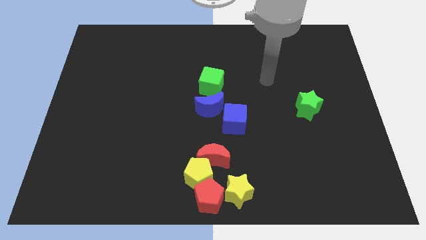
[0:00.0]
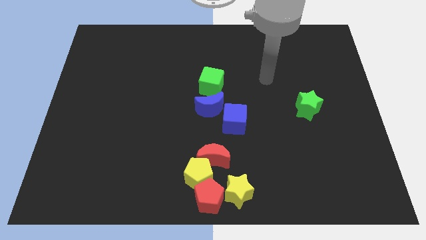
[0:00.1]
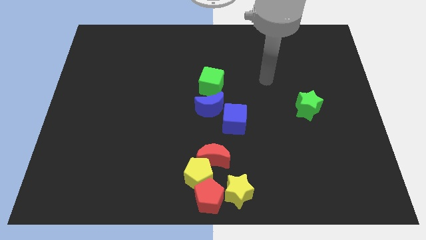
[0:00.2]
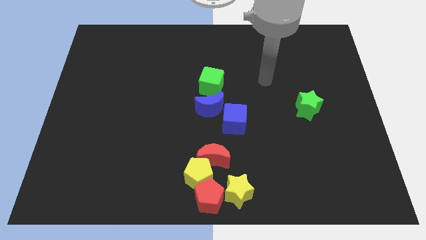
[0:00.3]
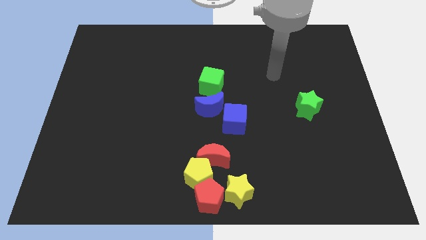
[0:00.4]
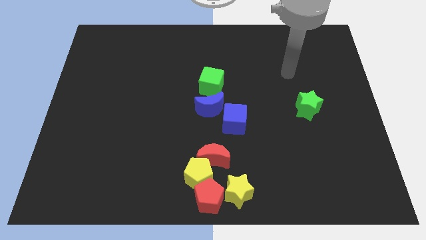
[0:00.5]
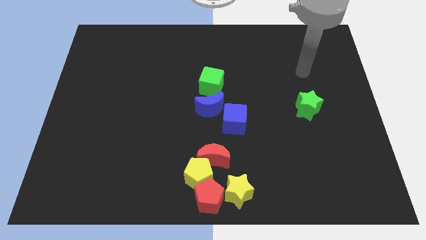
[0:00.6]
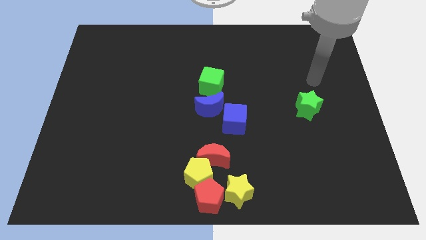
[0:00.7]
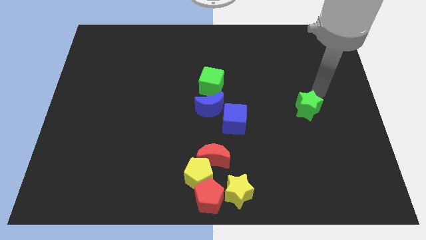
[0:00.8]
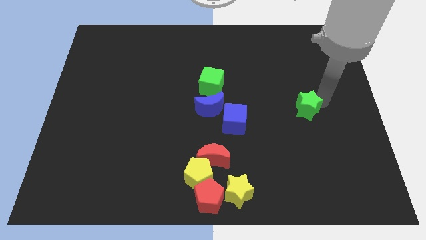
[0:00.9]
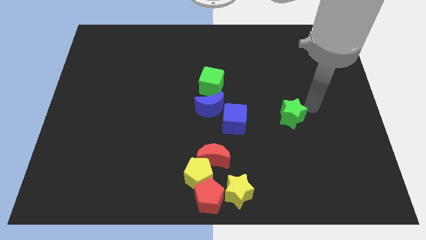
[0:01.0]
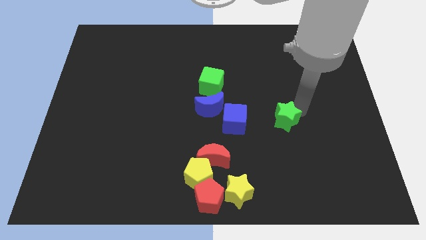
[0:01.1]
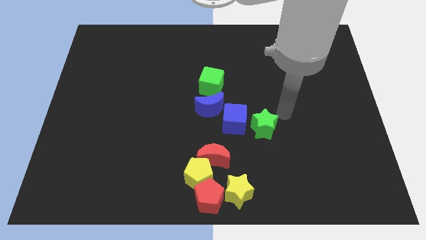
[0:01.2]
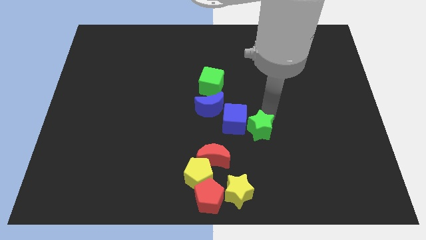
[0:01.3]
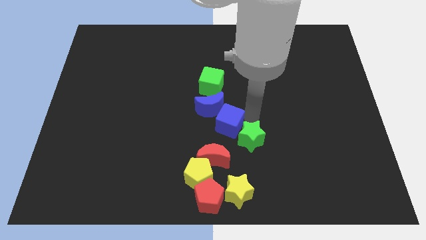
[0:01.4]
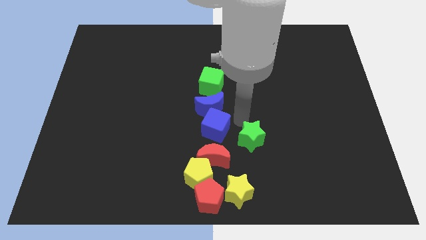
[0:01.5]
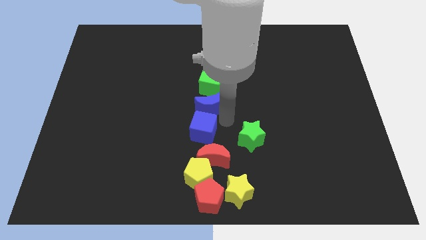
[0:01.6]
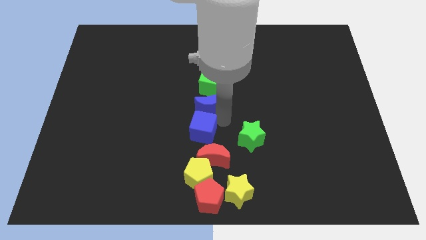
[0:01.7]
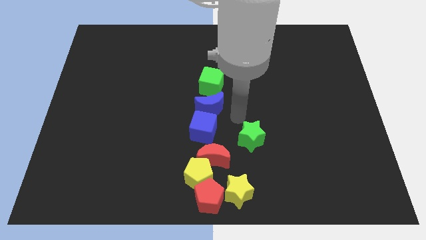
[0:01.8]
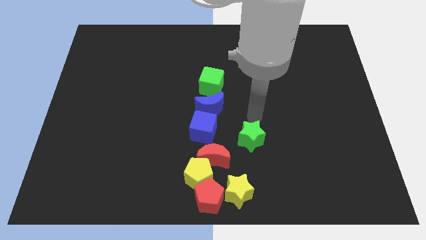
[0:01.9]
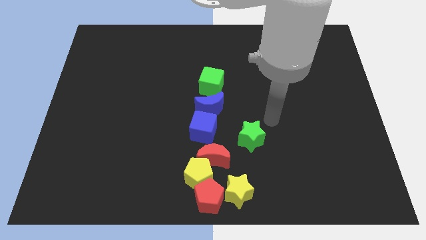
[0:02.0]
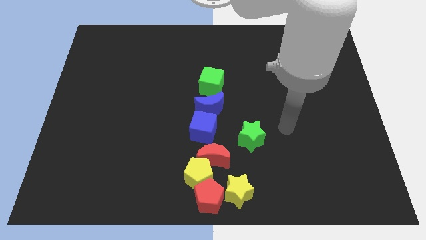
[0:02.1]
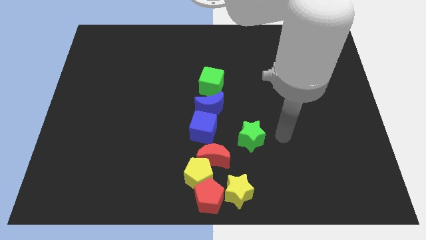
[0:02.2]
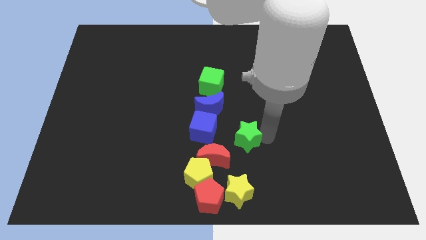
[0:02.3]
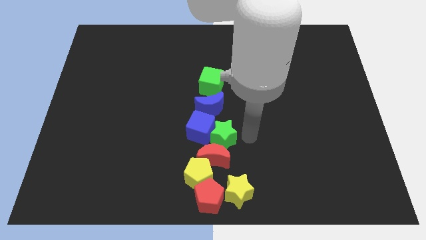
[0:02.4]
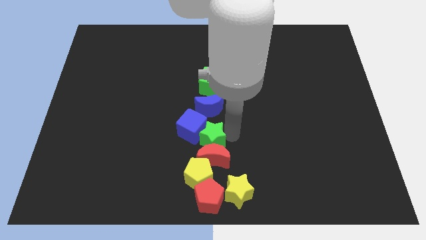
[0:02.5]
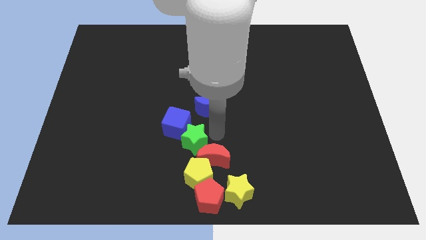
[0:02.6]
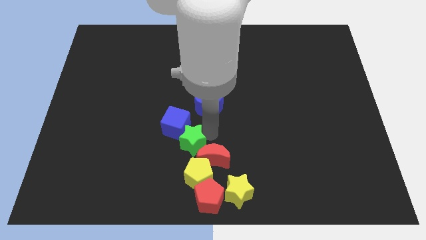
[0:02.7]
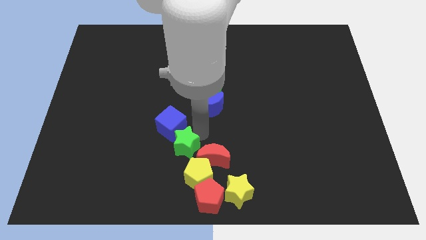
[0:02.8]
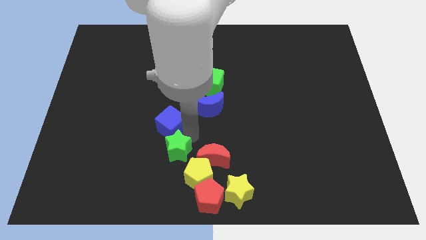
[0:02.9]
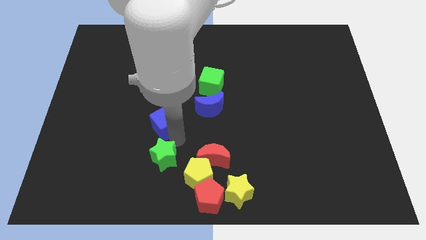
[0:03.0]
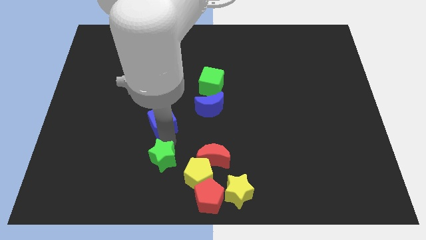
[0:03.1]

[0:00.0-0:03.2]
move the green star into the blue cube

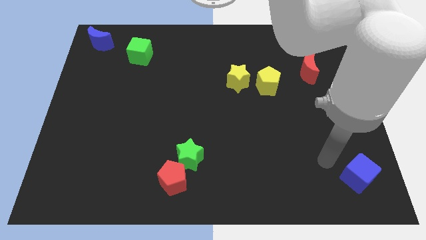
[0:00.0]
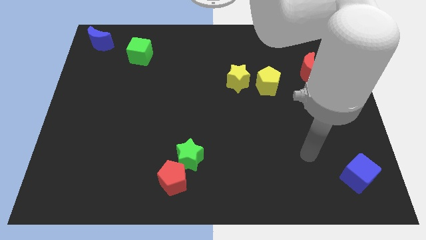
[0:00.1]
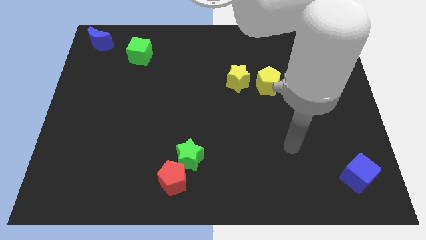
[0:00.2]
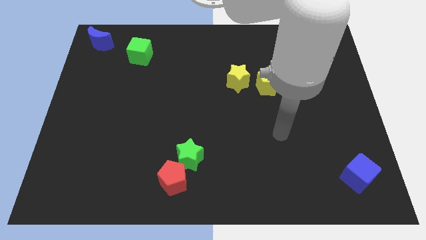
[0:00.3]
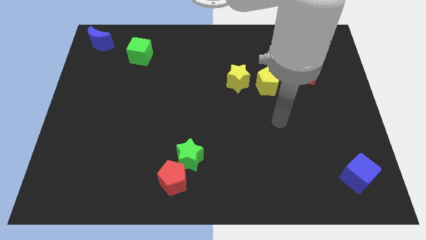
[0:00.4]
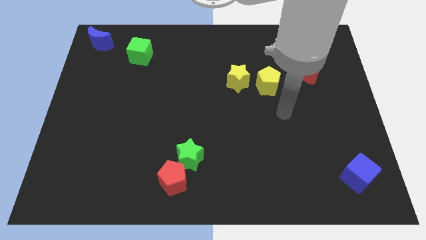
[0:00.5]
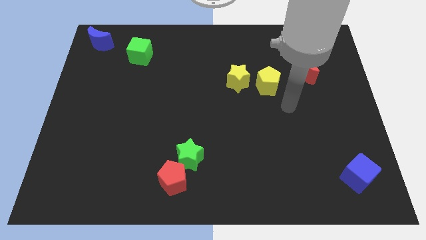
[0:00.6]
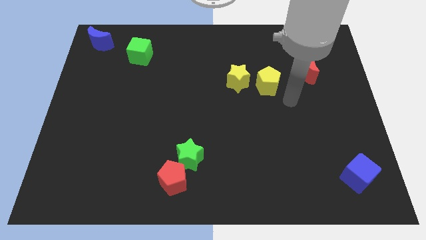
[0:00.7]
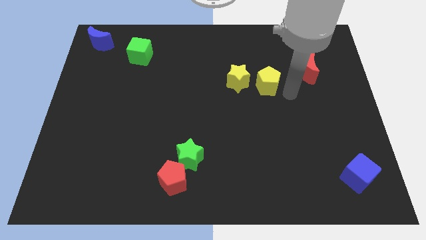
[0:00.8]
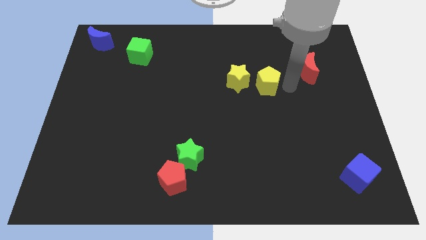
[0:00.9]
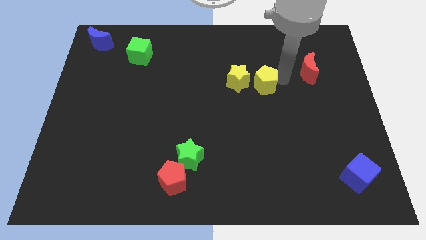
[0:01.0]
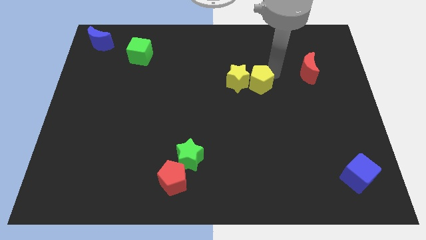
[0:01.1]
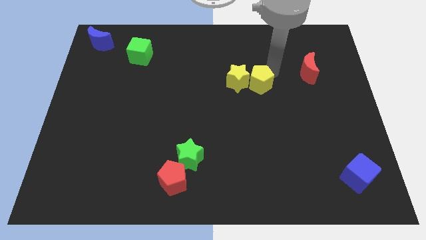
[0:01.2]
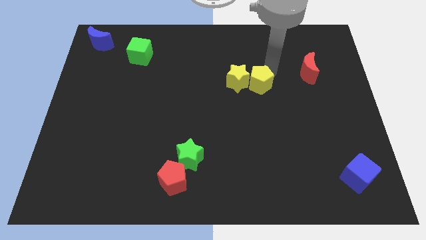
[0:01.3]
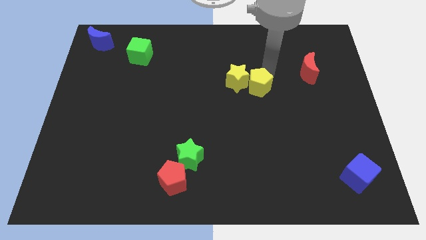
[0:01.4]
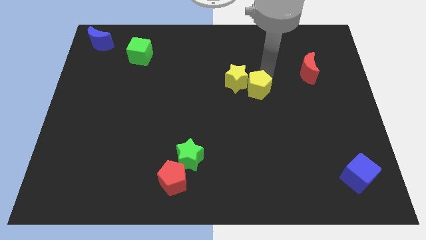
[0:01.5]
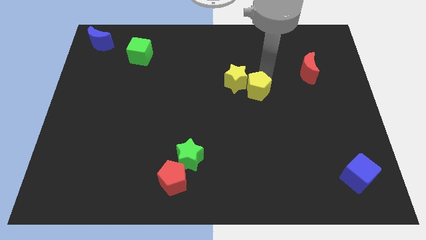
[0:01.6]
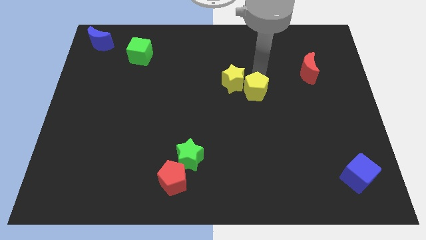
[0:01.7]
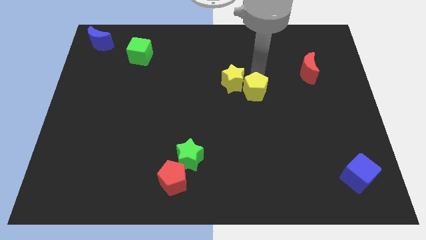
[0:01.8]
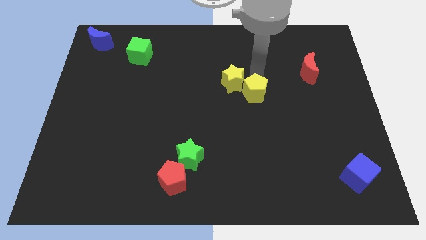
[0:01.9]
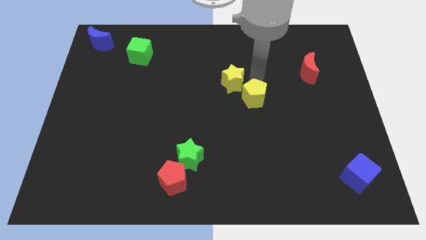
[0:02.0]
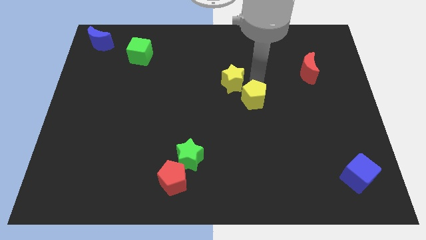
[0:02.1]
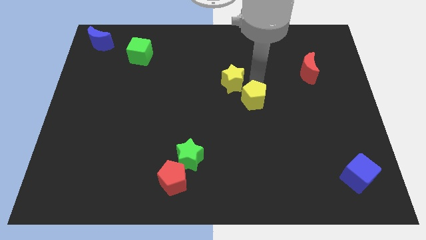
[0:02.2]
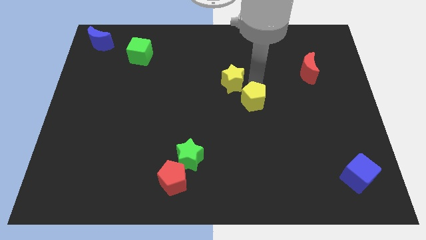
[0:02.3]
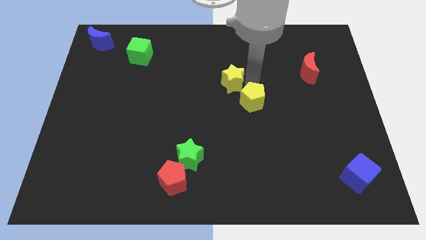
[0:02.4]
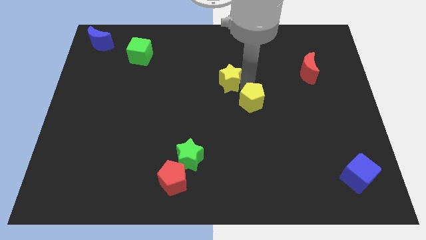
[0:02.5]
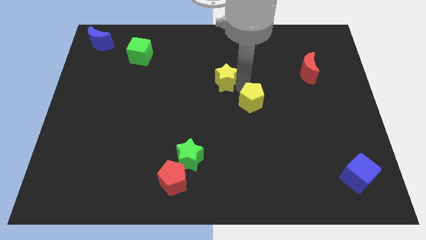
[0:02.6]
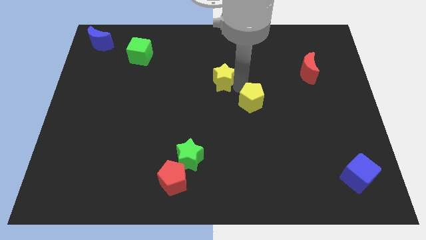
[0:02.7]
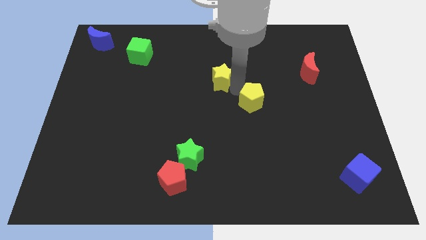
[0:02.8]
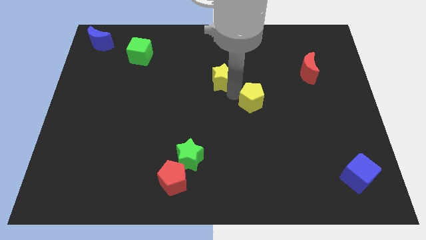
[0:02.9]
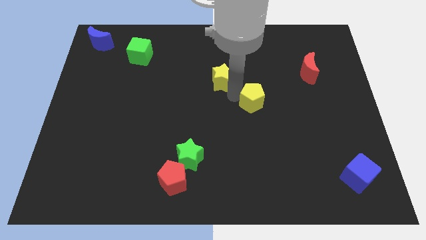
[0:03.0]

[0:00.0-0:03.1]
place your arm between the yellow star and yellow pentagon

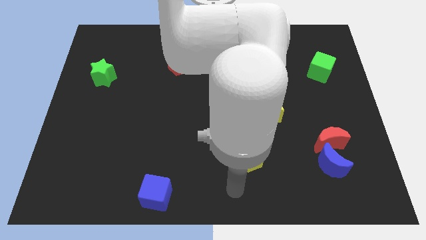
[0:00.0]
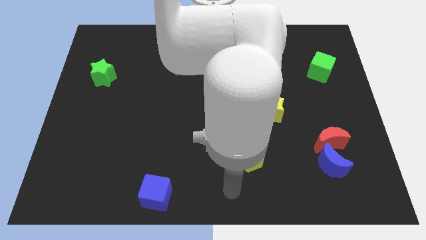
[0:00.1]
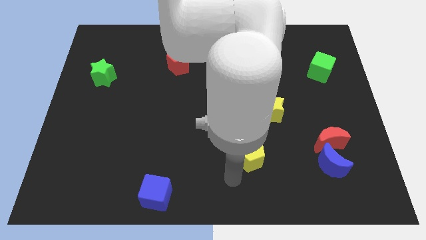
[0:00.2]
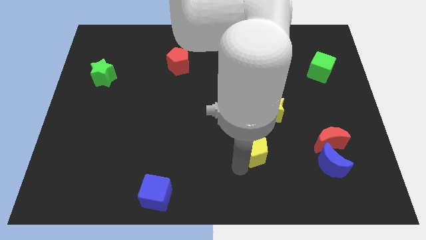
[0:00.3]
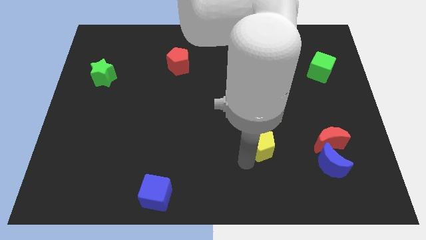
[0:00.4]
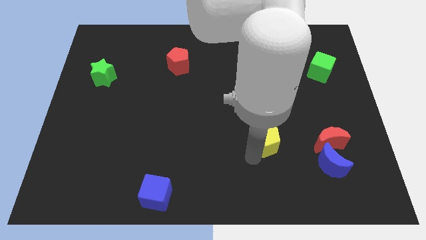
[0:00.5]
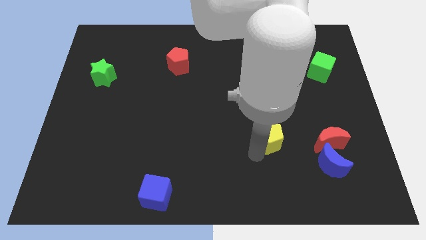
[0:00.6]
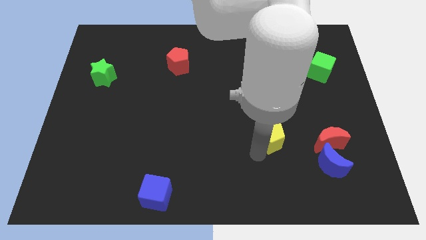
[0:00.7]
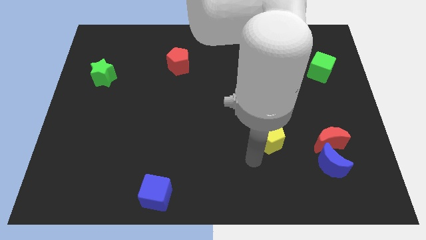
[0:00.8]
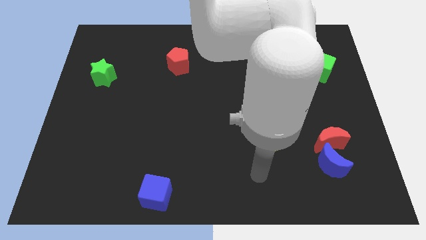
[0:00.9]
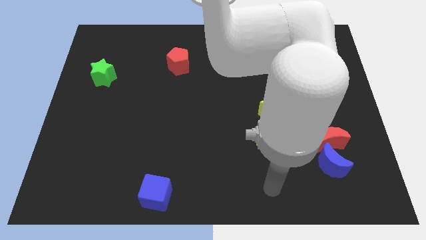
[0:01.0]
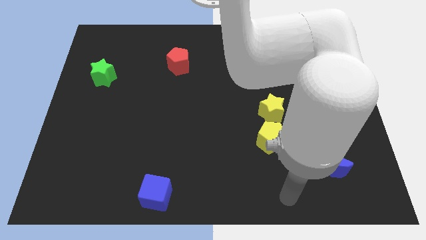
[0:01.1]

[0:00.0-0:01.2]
push the yellow pentagon towards the yellow star

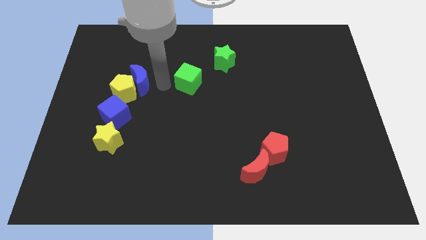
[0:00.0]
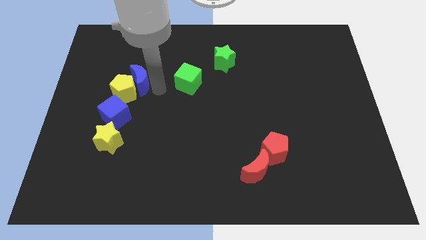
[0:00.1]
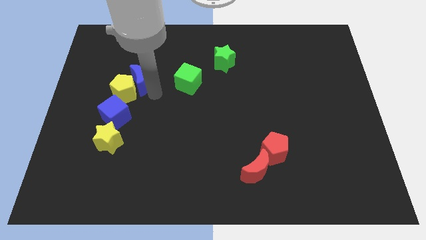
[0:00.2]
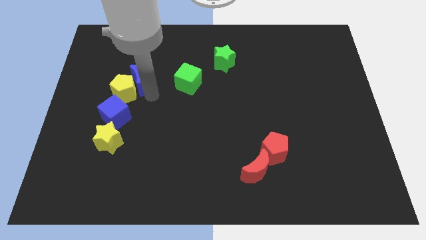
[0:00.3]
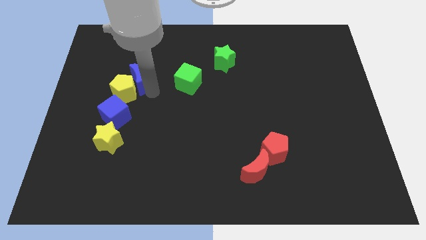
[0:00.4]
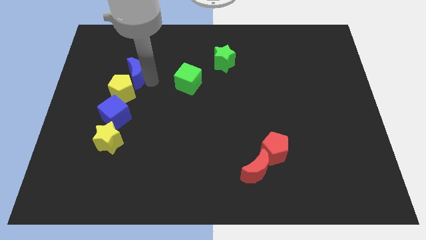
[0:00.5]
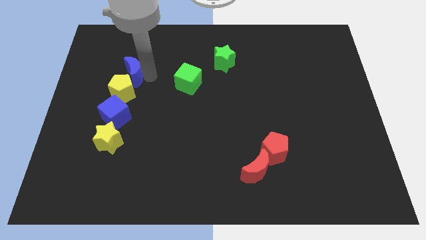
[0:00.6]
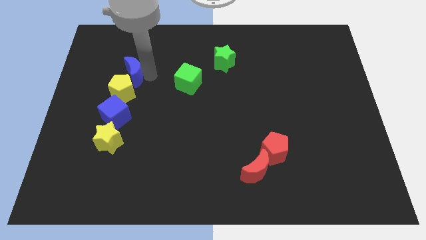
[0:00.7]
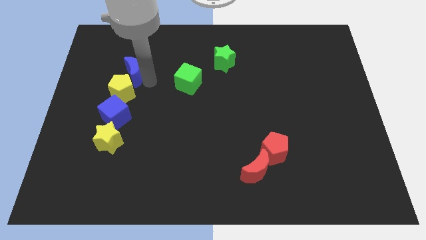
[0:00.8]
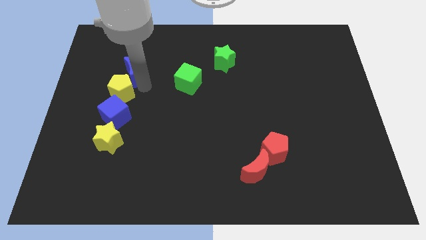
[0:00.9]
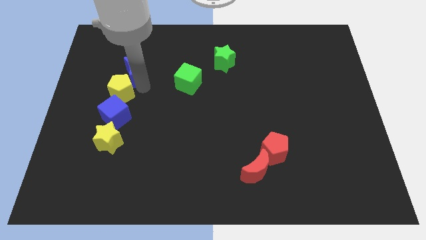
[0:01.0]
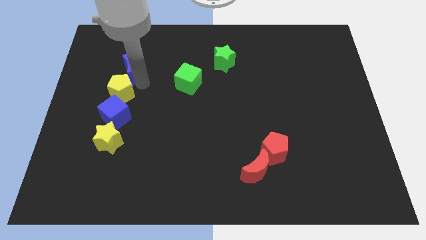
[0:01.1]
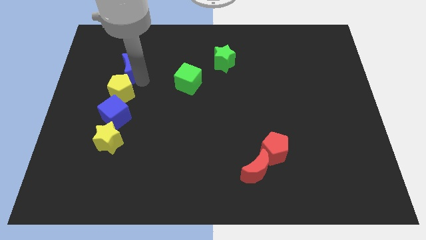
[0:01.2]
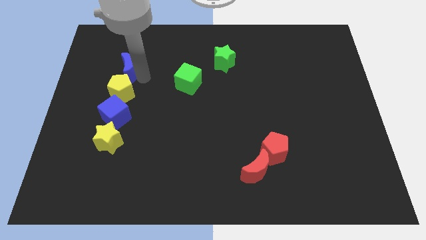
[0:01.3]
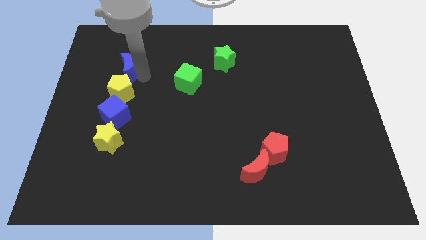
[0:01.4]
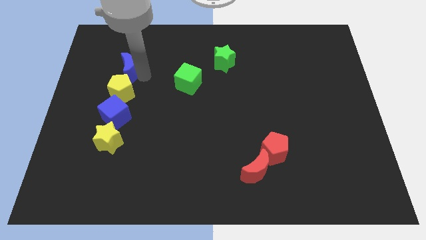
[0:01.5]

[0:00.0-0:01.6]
point your arm right to blue moon
